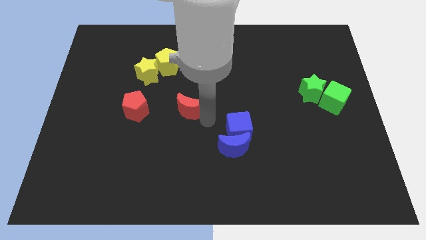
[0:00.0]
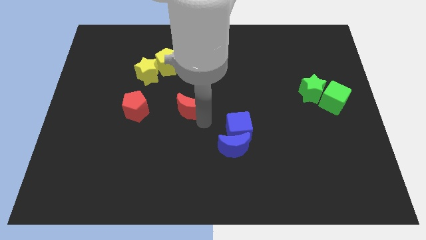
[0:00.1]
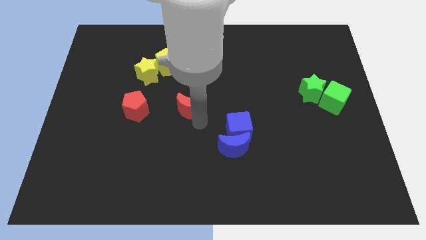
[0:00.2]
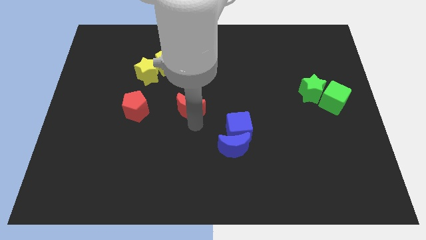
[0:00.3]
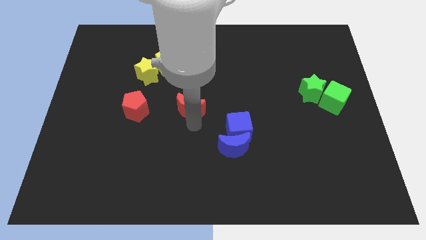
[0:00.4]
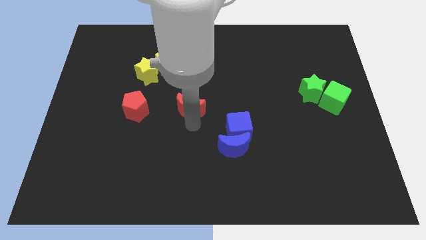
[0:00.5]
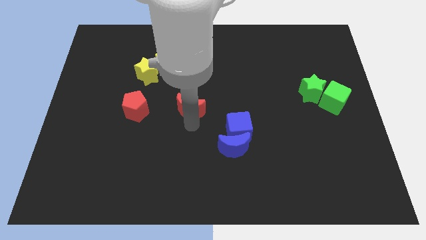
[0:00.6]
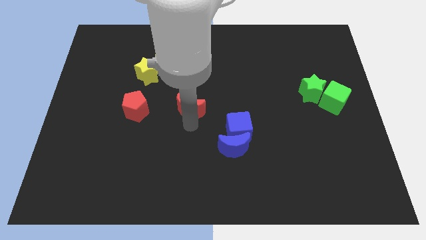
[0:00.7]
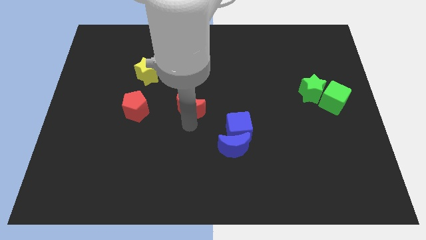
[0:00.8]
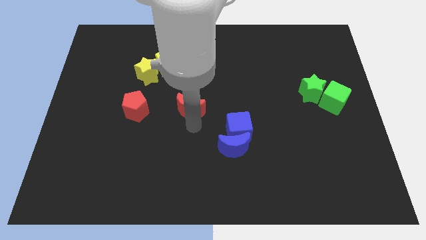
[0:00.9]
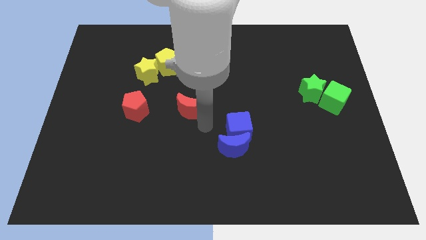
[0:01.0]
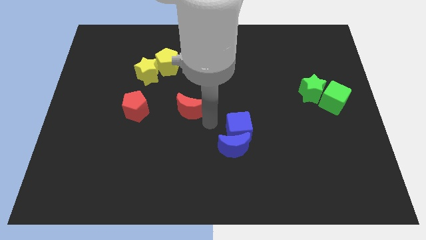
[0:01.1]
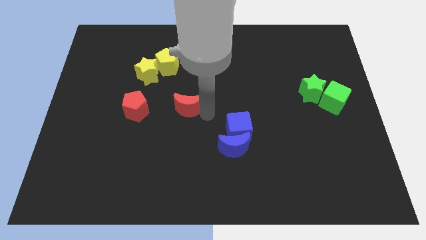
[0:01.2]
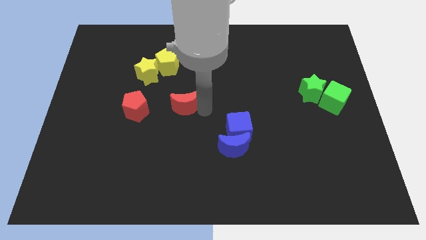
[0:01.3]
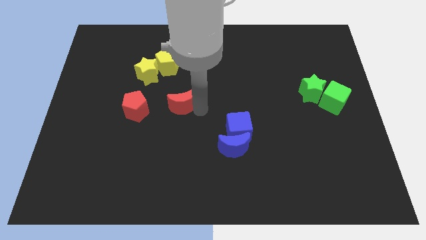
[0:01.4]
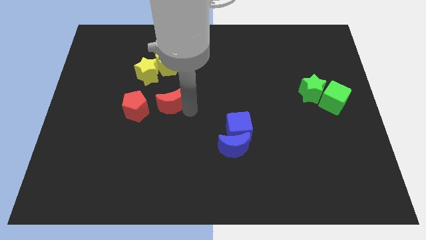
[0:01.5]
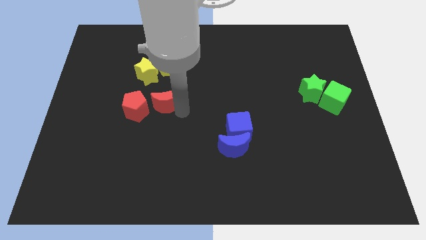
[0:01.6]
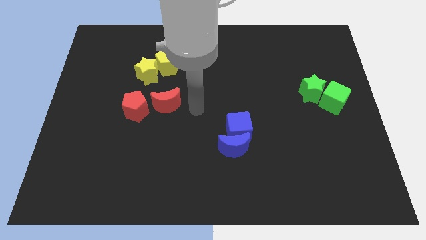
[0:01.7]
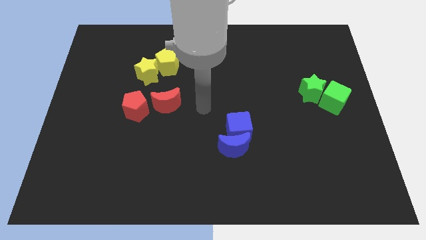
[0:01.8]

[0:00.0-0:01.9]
move the red moon close to the red pentagon

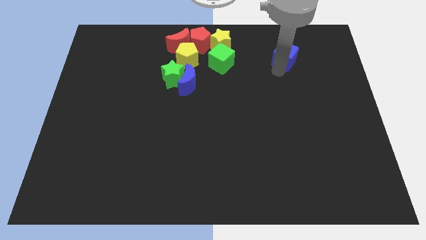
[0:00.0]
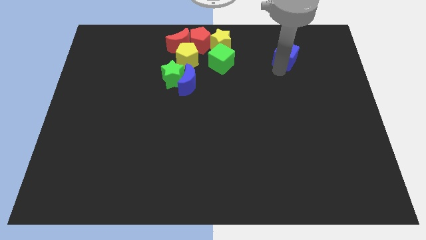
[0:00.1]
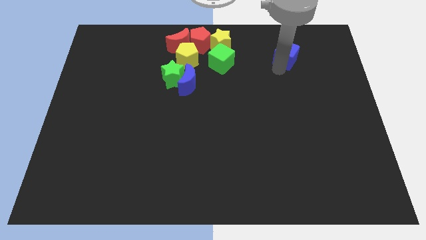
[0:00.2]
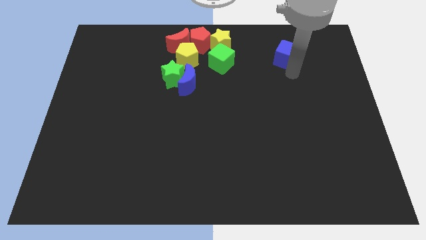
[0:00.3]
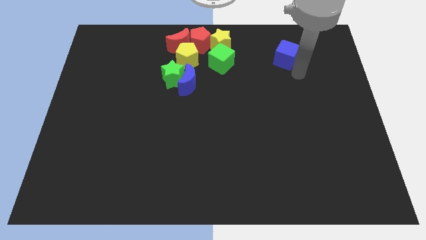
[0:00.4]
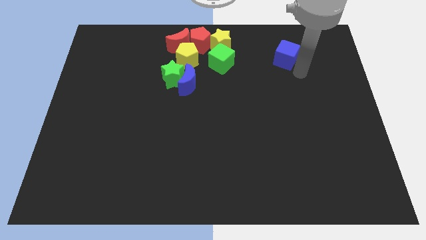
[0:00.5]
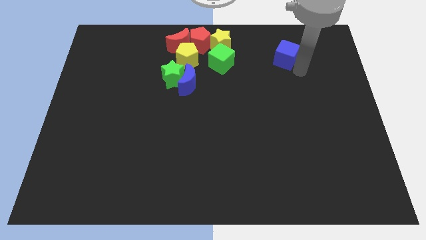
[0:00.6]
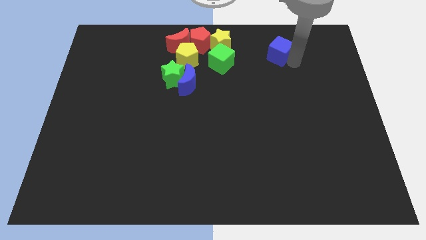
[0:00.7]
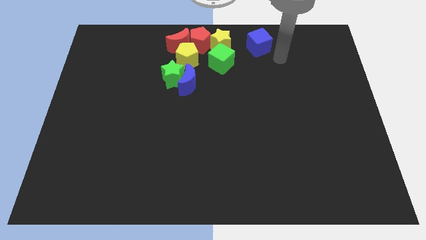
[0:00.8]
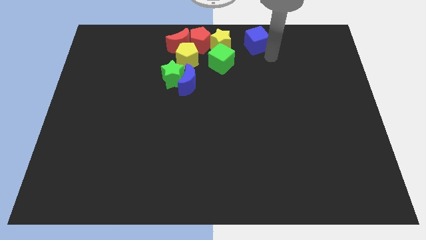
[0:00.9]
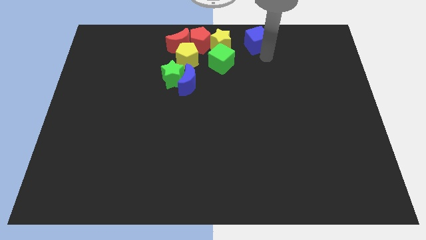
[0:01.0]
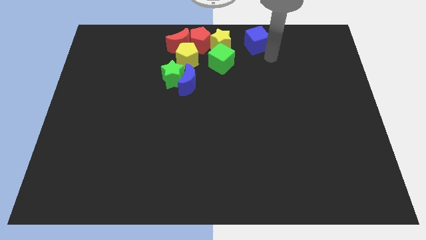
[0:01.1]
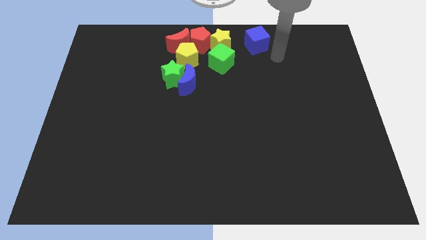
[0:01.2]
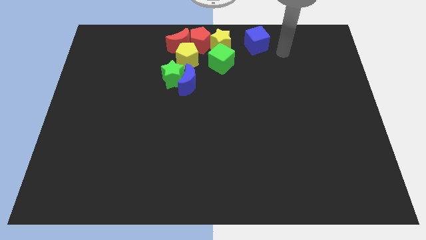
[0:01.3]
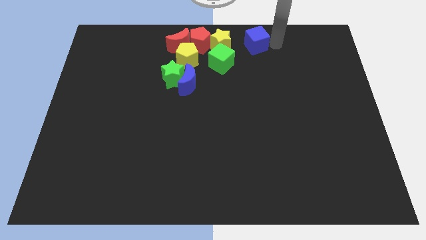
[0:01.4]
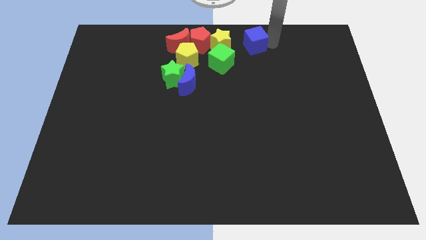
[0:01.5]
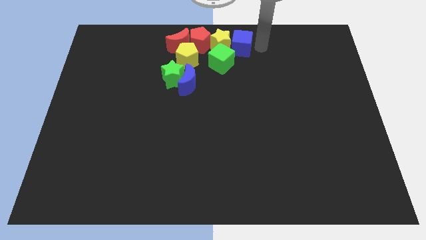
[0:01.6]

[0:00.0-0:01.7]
slide the blue cube towards the right side of the yellow star

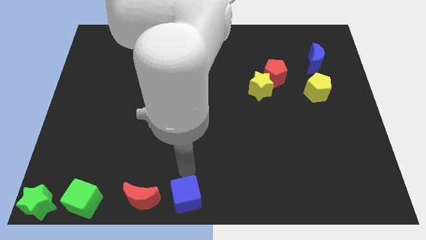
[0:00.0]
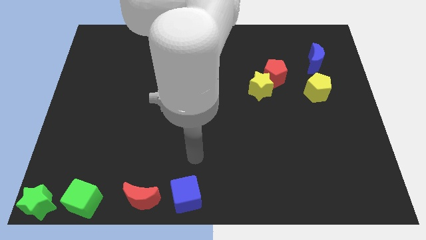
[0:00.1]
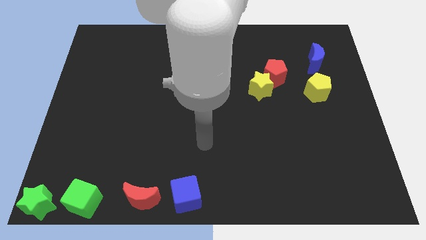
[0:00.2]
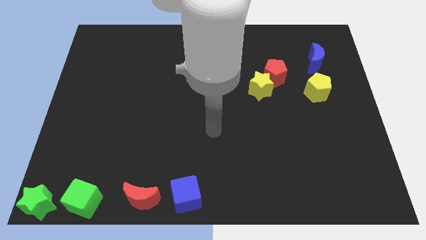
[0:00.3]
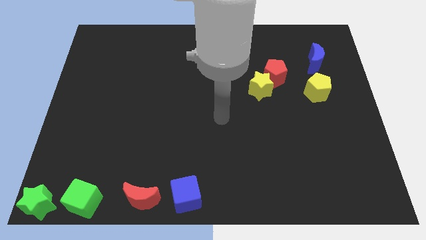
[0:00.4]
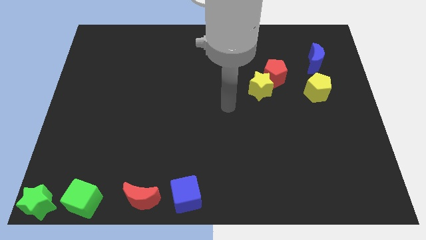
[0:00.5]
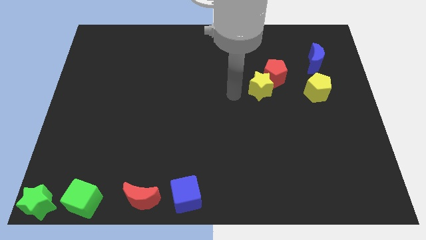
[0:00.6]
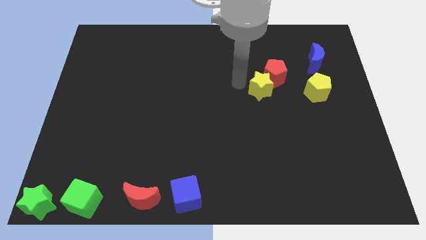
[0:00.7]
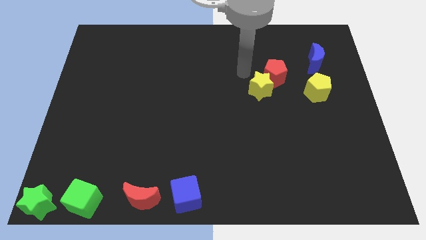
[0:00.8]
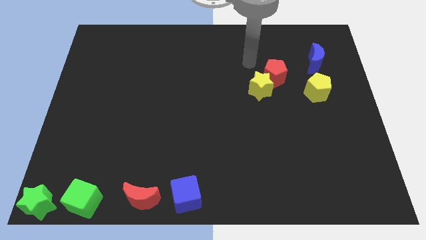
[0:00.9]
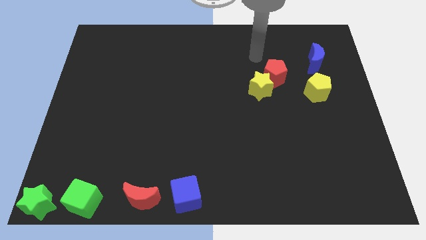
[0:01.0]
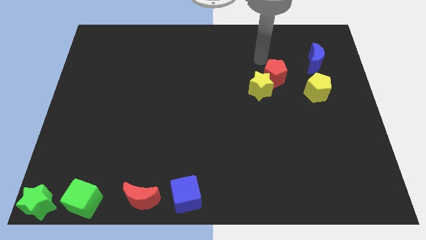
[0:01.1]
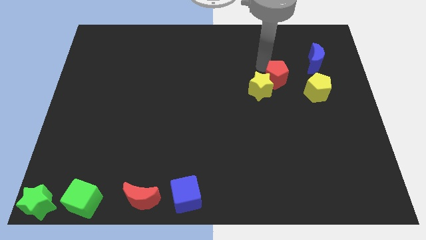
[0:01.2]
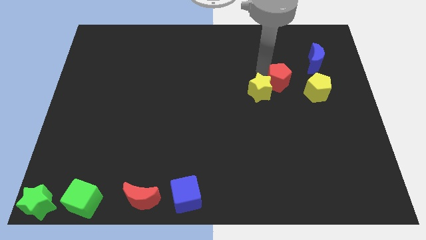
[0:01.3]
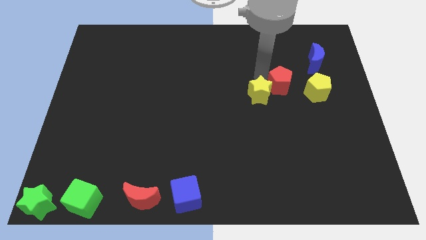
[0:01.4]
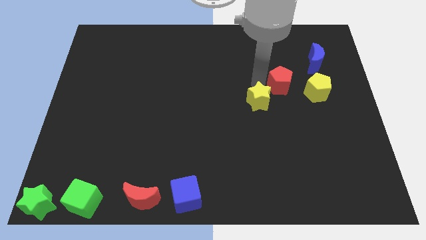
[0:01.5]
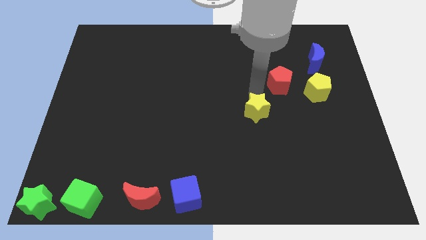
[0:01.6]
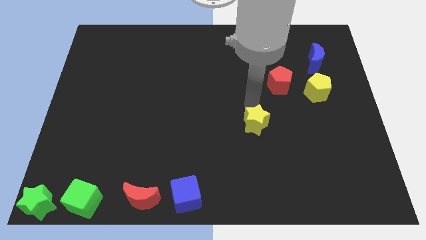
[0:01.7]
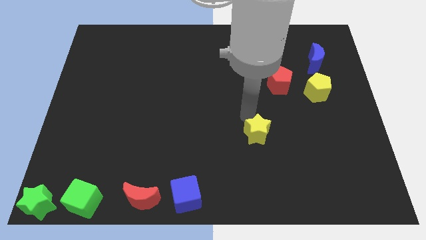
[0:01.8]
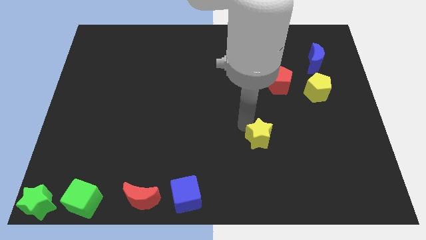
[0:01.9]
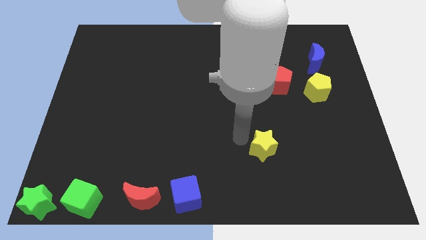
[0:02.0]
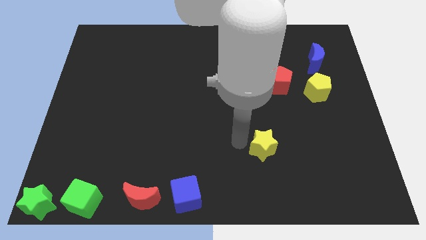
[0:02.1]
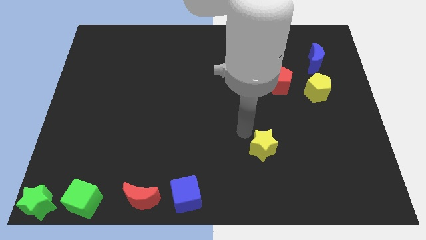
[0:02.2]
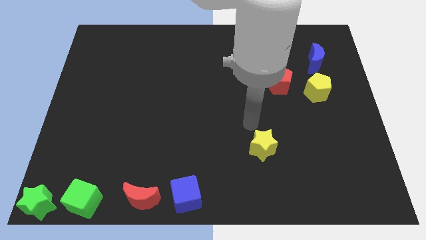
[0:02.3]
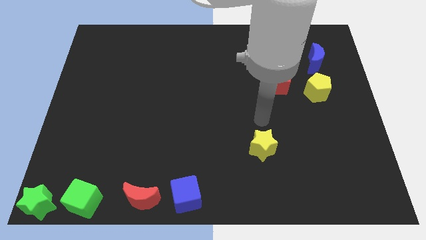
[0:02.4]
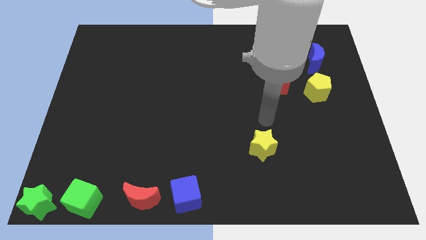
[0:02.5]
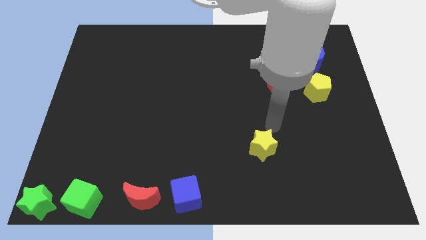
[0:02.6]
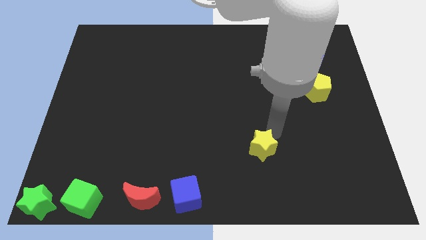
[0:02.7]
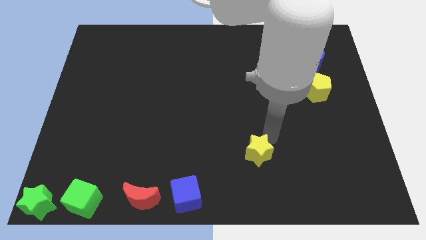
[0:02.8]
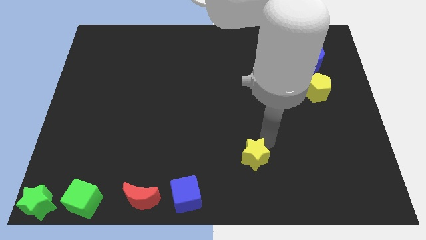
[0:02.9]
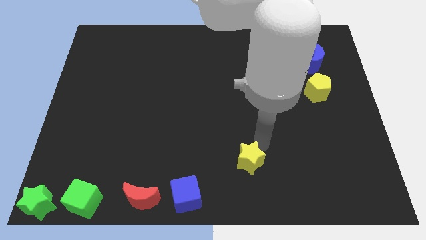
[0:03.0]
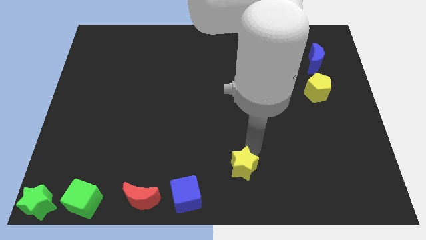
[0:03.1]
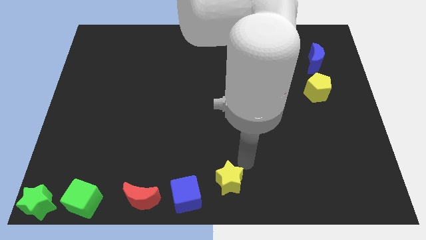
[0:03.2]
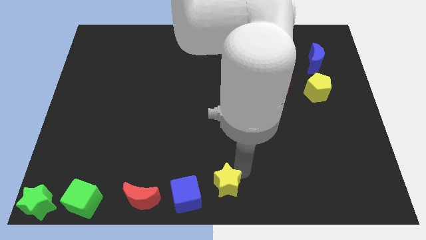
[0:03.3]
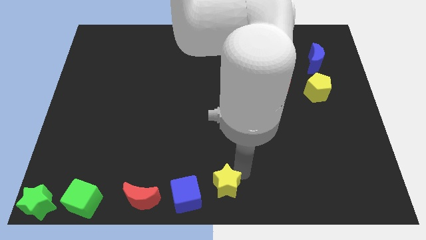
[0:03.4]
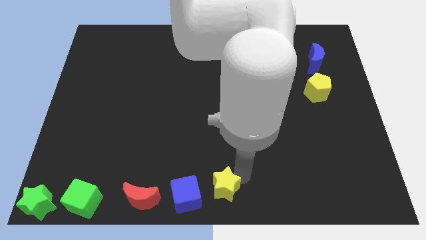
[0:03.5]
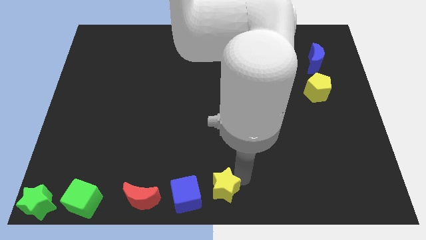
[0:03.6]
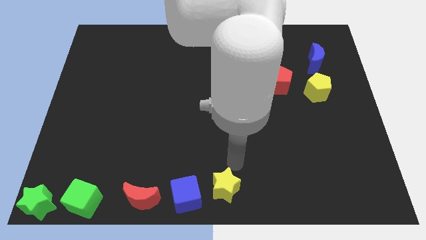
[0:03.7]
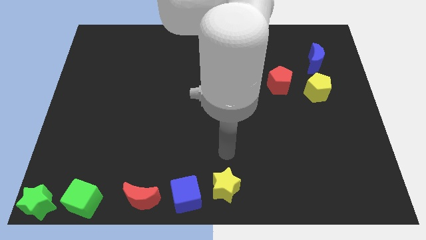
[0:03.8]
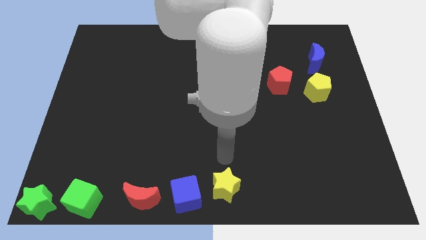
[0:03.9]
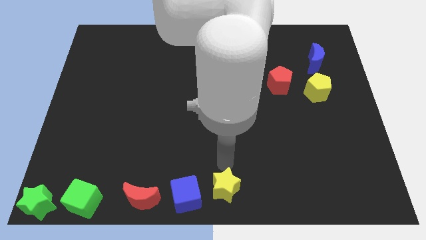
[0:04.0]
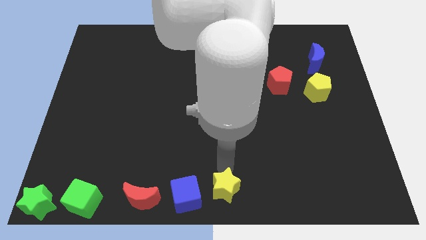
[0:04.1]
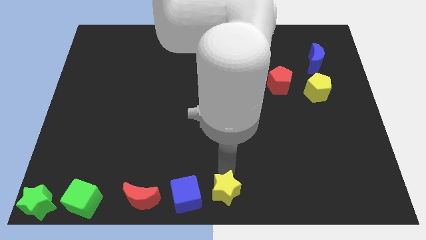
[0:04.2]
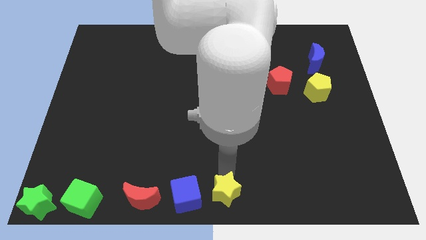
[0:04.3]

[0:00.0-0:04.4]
push the yellow star to the right side of the blue cube

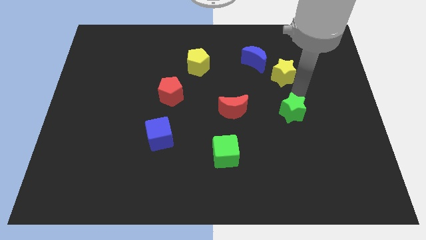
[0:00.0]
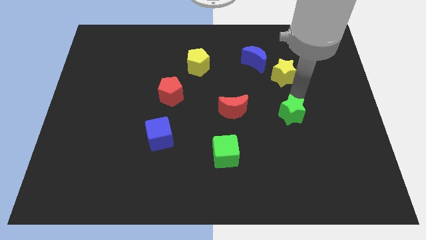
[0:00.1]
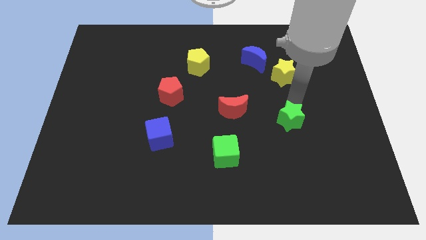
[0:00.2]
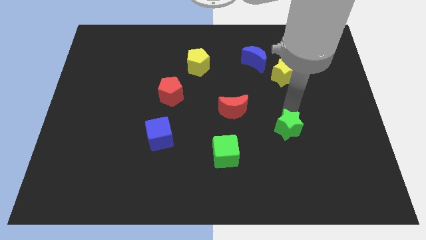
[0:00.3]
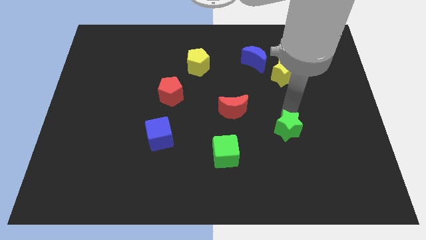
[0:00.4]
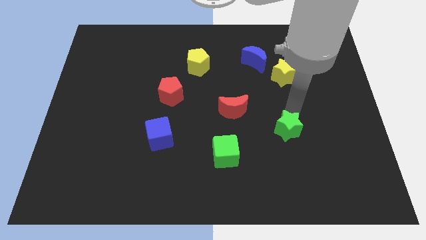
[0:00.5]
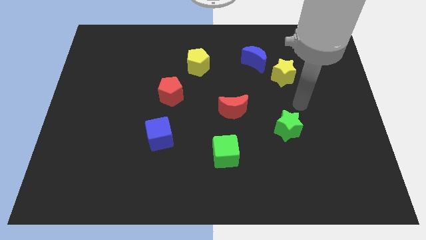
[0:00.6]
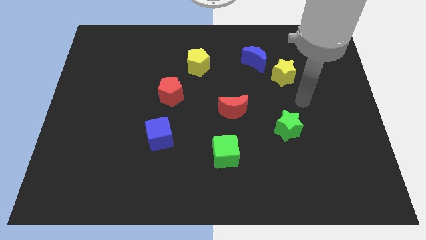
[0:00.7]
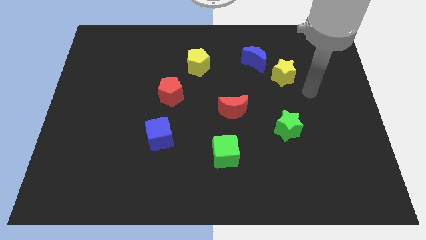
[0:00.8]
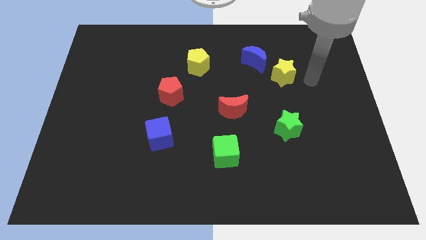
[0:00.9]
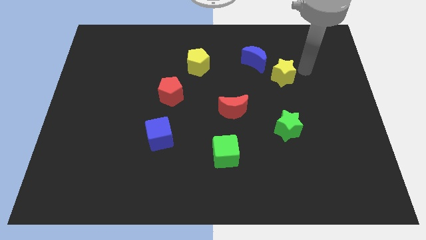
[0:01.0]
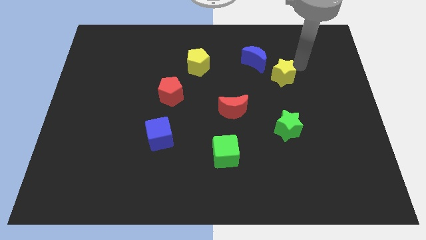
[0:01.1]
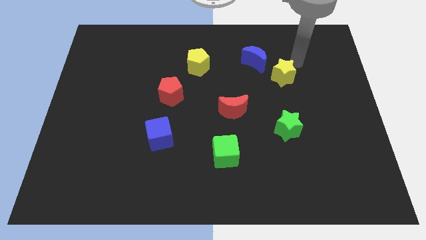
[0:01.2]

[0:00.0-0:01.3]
move green star towards the bottom of the board
